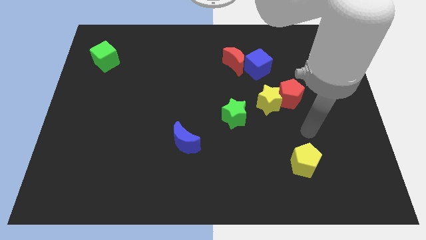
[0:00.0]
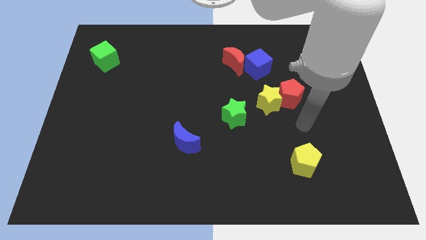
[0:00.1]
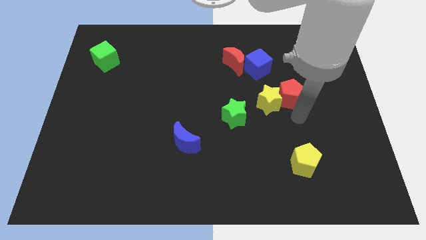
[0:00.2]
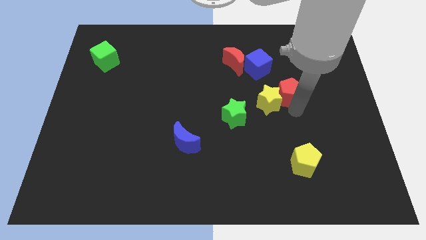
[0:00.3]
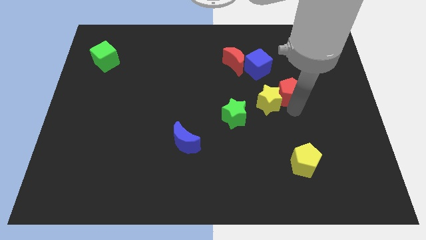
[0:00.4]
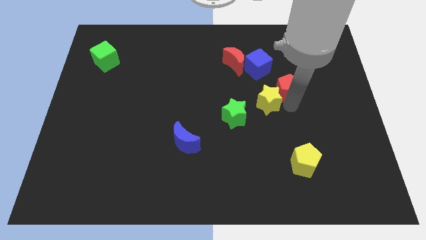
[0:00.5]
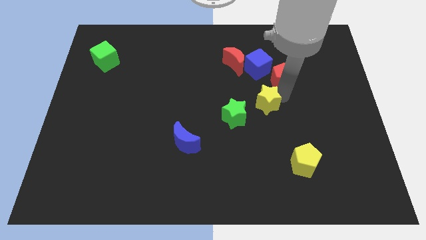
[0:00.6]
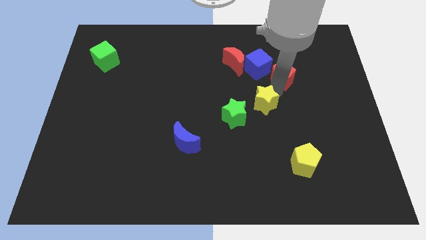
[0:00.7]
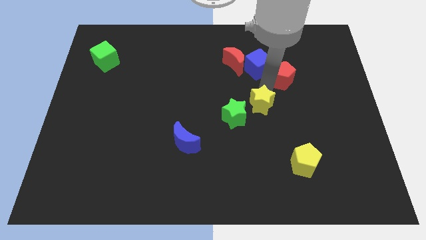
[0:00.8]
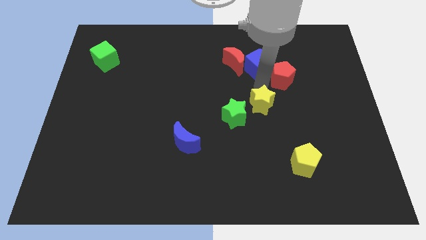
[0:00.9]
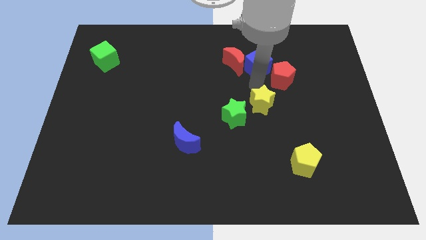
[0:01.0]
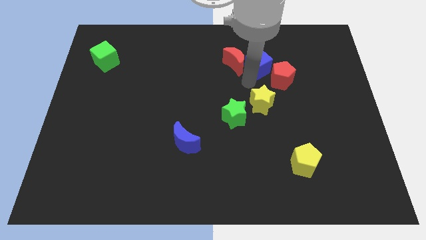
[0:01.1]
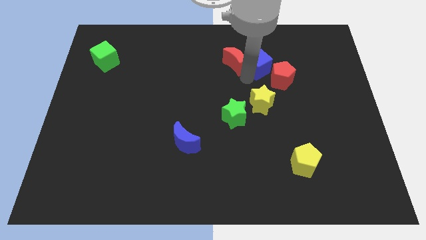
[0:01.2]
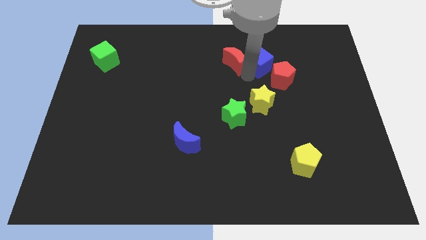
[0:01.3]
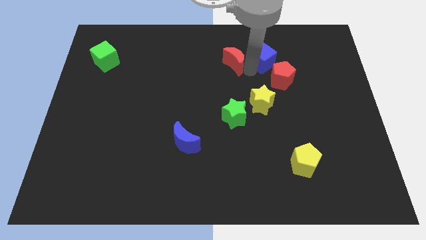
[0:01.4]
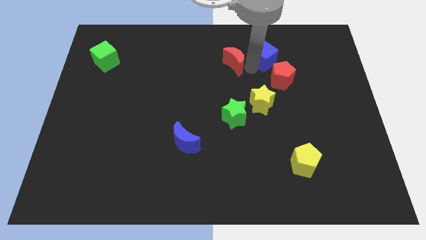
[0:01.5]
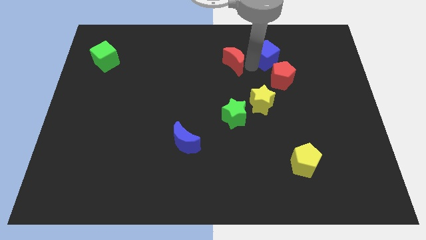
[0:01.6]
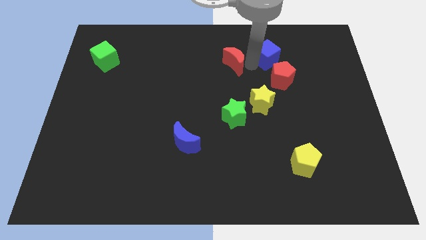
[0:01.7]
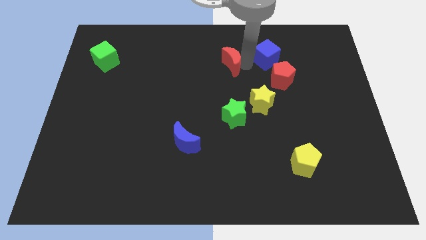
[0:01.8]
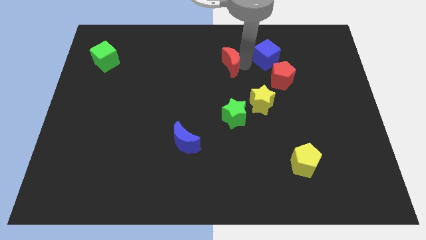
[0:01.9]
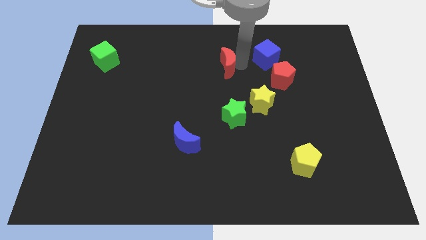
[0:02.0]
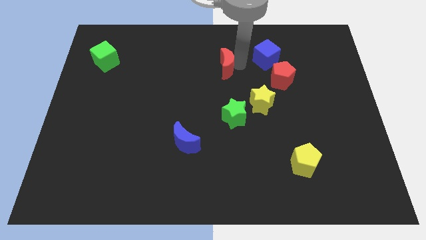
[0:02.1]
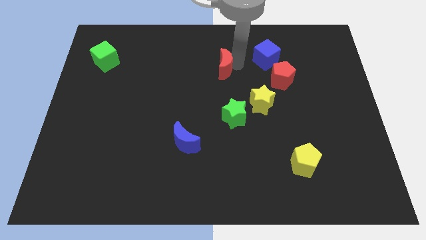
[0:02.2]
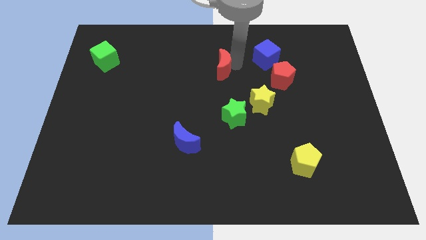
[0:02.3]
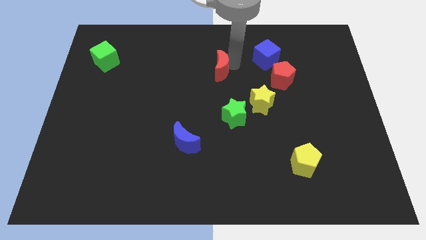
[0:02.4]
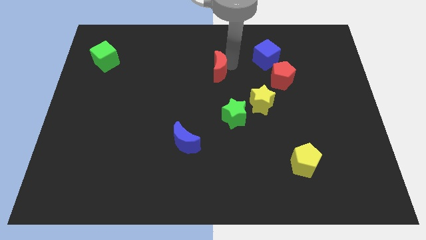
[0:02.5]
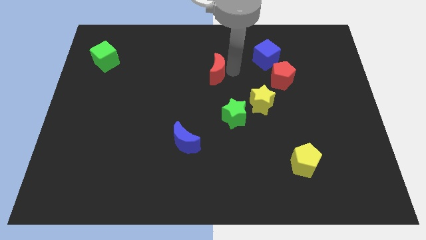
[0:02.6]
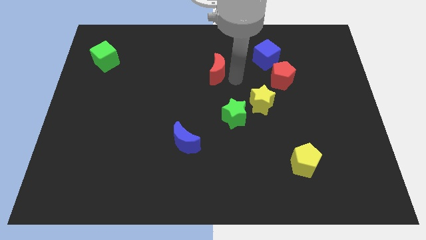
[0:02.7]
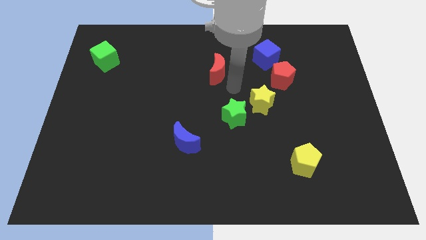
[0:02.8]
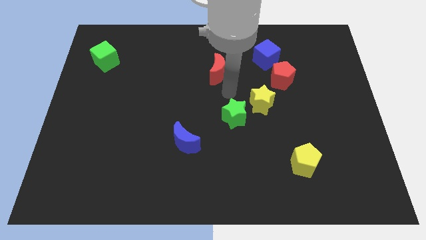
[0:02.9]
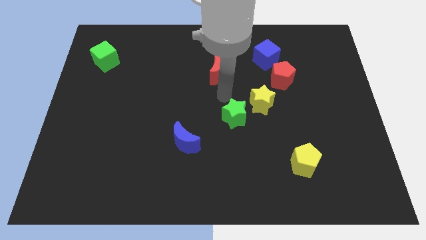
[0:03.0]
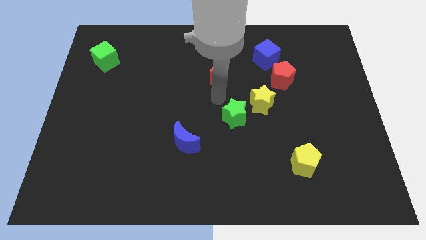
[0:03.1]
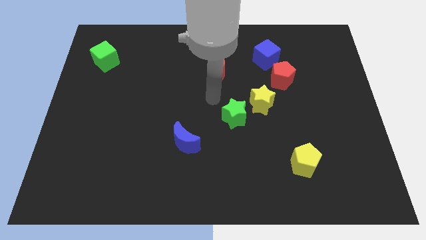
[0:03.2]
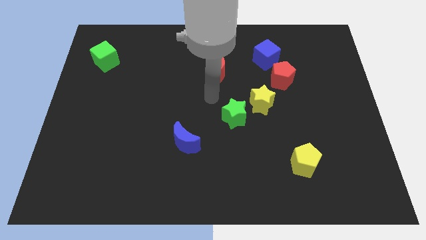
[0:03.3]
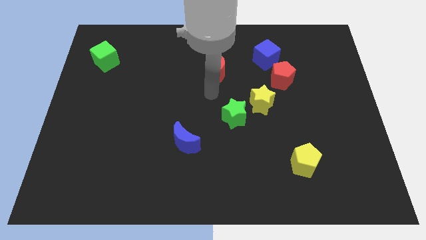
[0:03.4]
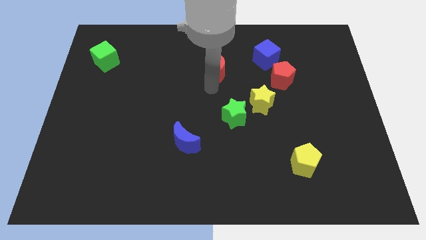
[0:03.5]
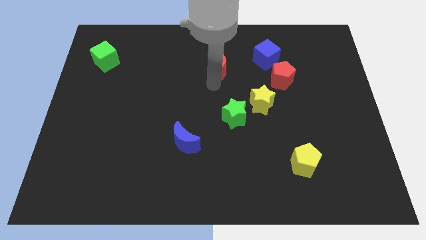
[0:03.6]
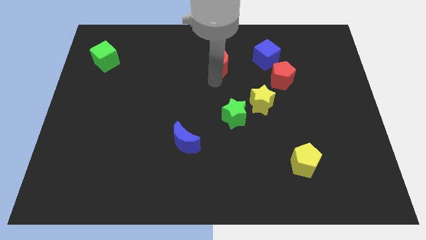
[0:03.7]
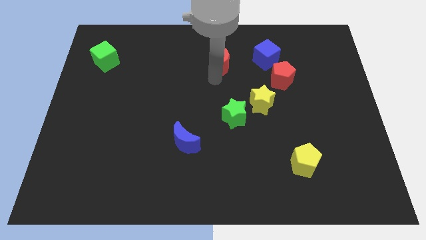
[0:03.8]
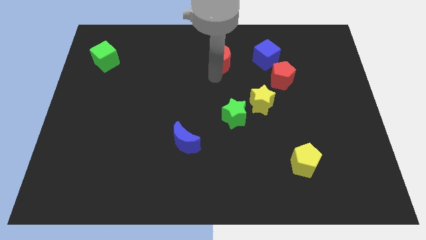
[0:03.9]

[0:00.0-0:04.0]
place the red moon left to the blue moon

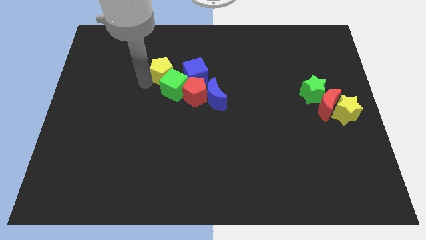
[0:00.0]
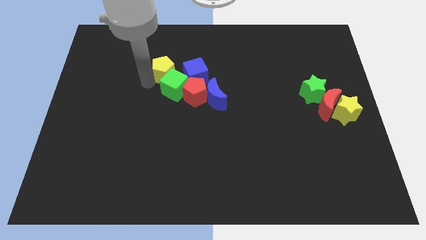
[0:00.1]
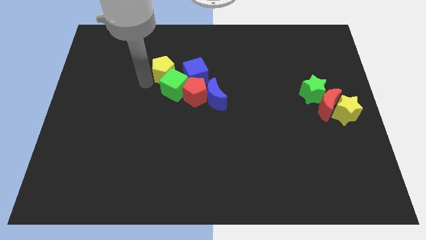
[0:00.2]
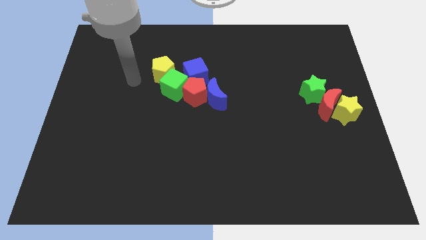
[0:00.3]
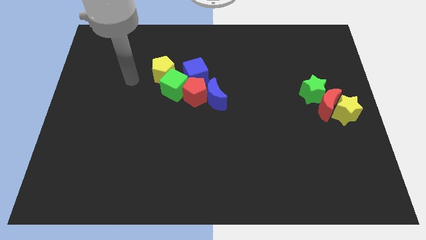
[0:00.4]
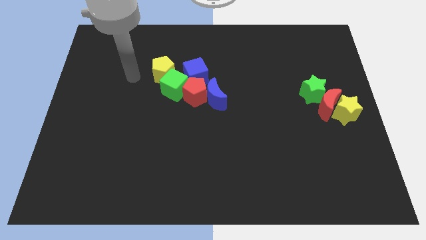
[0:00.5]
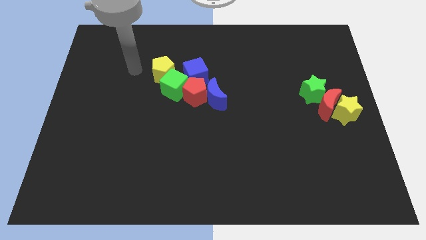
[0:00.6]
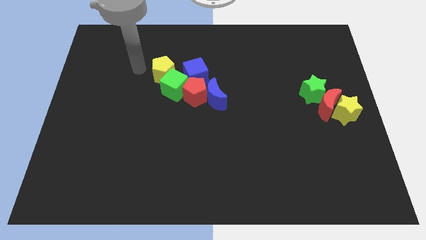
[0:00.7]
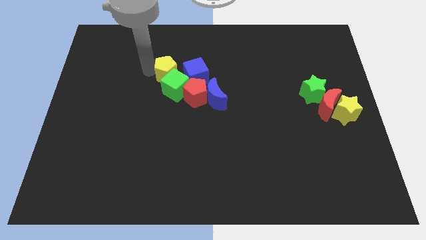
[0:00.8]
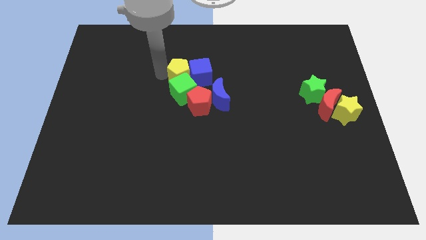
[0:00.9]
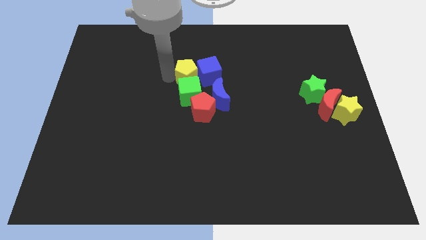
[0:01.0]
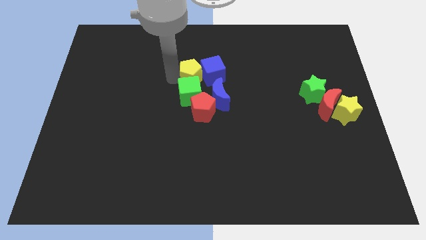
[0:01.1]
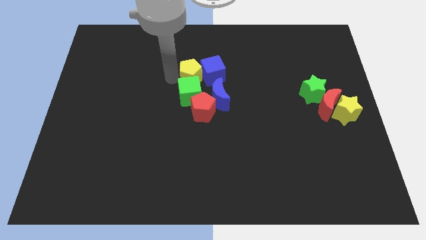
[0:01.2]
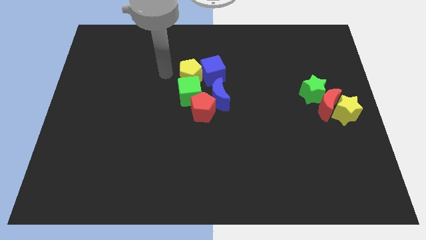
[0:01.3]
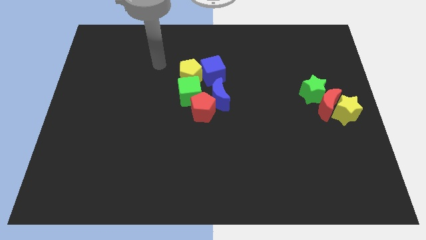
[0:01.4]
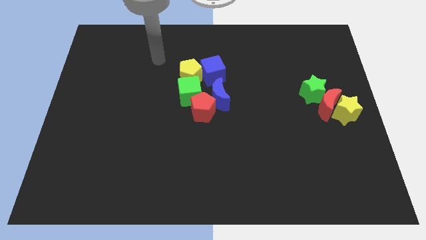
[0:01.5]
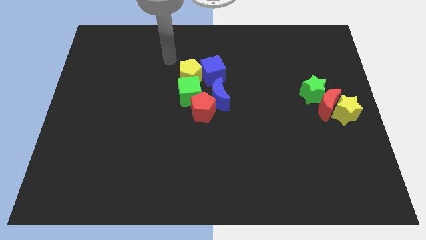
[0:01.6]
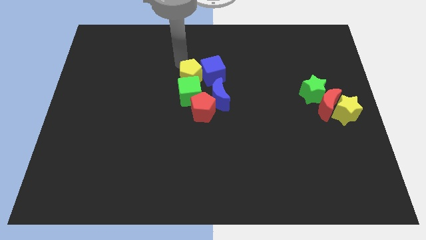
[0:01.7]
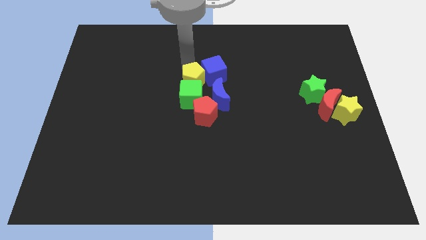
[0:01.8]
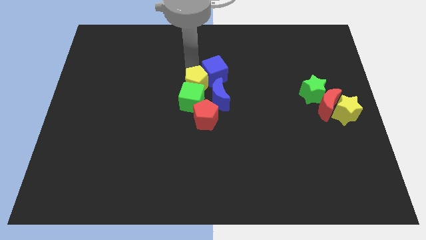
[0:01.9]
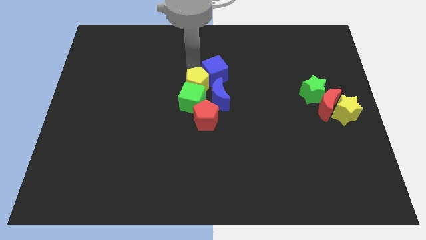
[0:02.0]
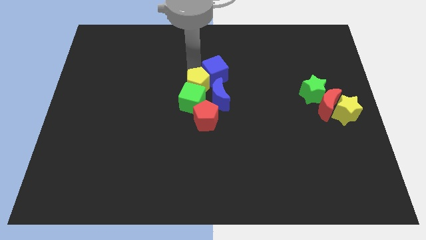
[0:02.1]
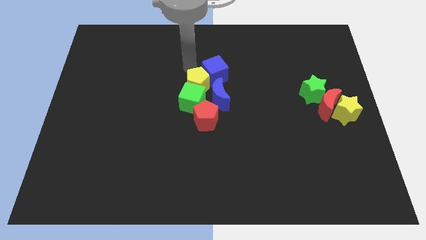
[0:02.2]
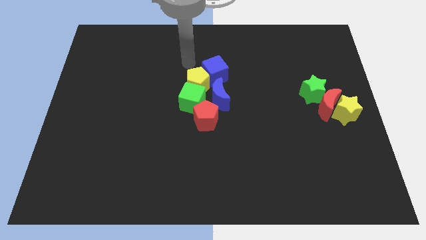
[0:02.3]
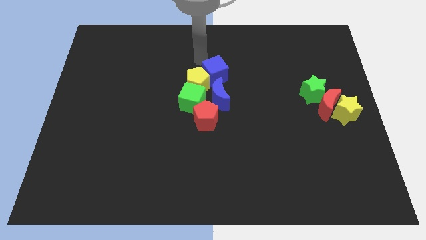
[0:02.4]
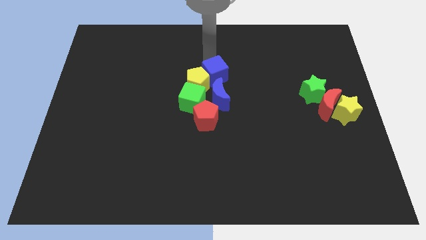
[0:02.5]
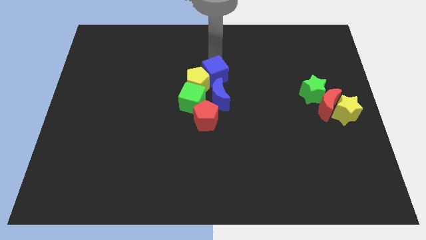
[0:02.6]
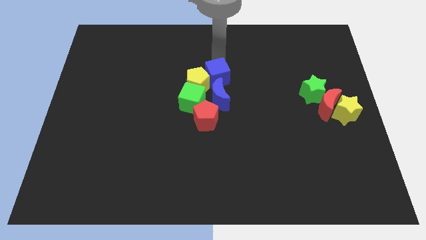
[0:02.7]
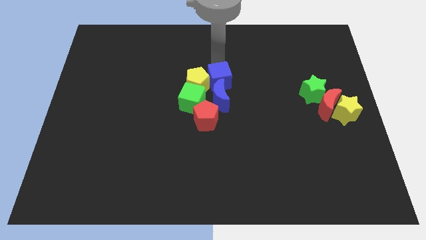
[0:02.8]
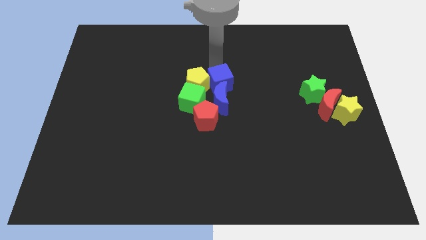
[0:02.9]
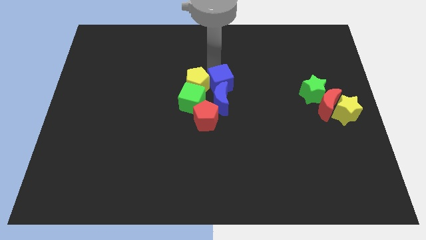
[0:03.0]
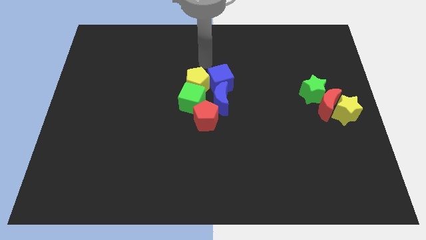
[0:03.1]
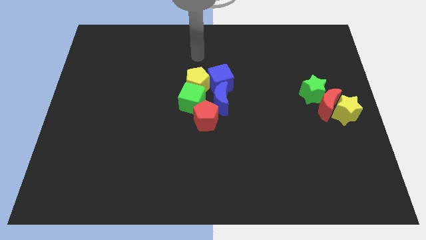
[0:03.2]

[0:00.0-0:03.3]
arrange the group of blocks at the center of the table

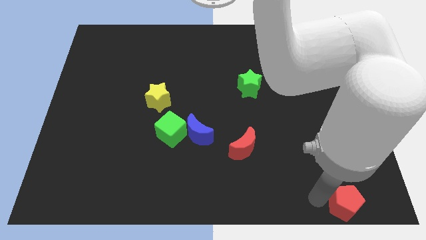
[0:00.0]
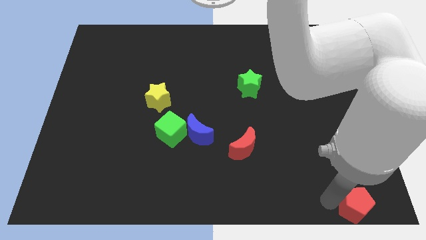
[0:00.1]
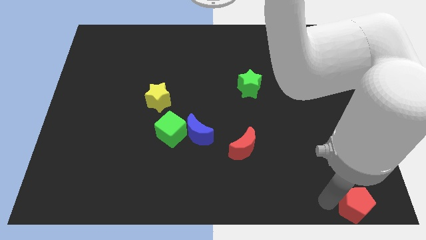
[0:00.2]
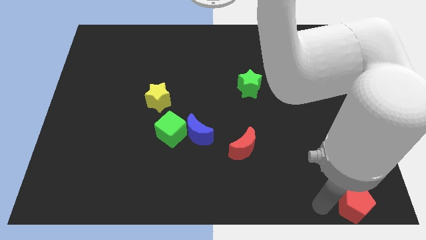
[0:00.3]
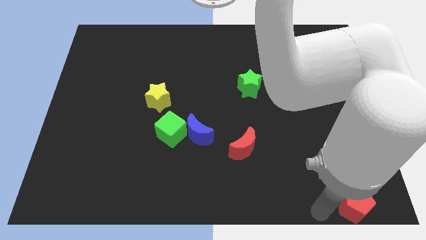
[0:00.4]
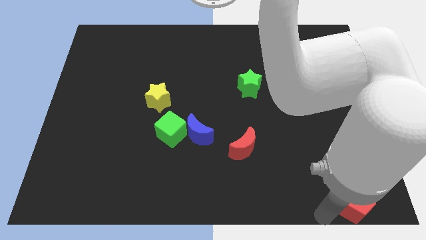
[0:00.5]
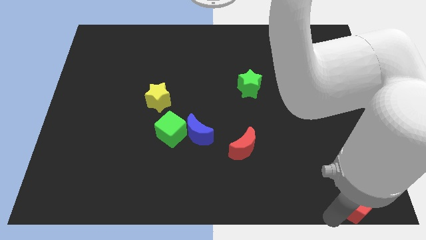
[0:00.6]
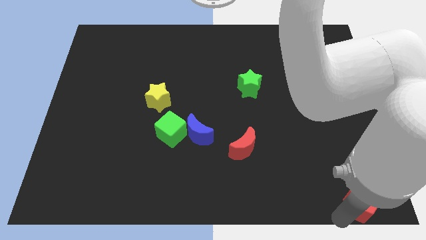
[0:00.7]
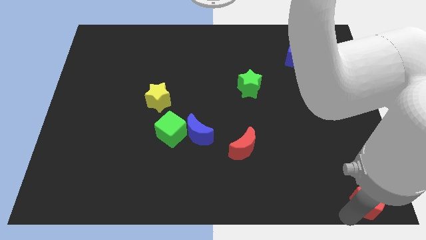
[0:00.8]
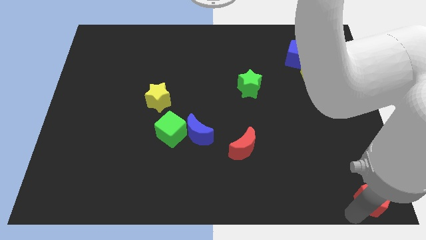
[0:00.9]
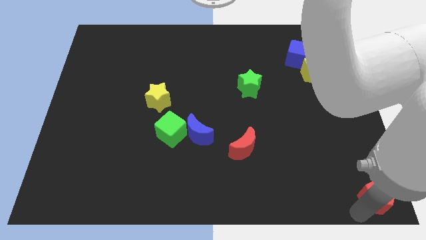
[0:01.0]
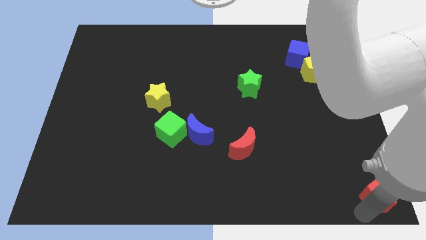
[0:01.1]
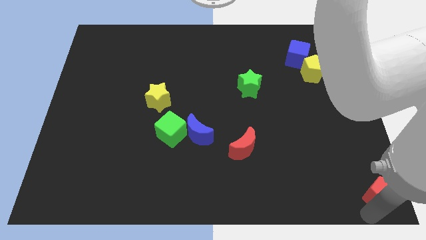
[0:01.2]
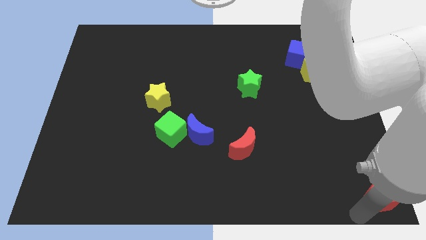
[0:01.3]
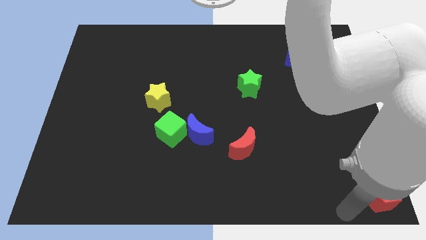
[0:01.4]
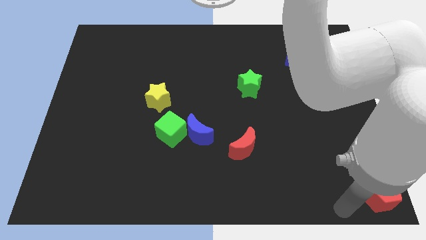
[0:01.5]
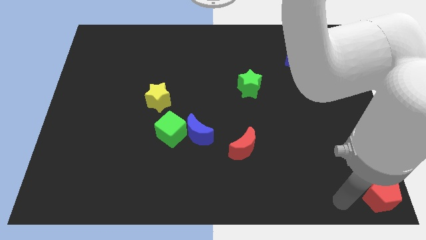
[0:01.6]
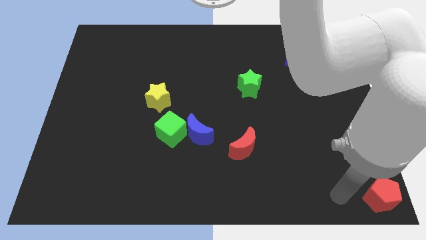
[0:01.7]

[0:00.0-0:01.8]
push the red pentagon to the bottom right corner
